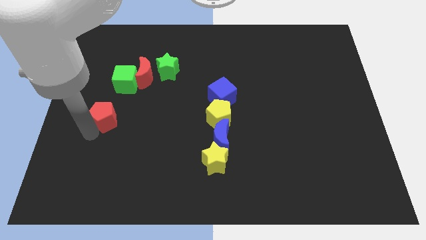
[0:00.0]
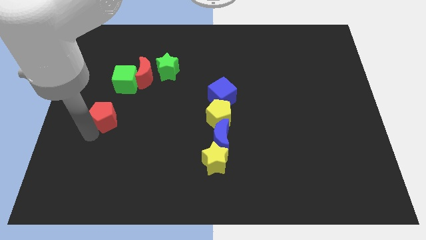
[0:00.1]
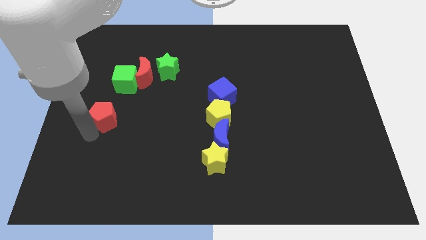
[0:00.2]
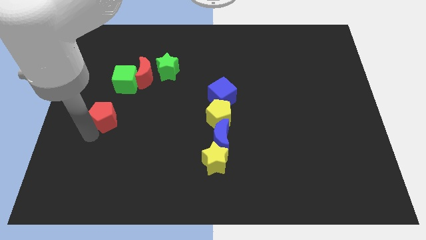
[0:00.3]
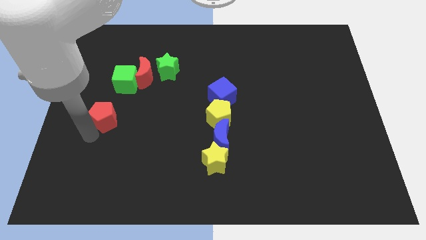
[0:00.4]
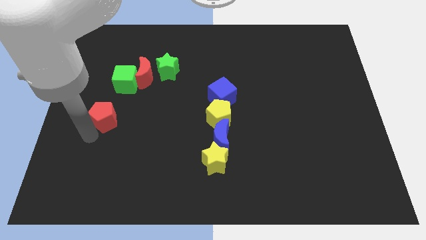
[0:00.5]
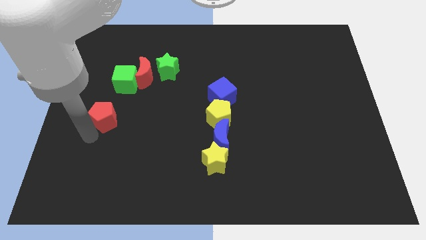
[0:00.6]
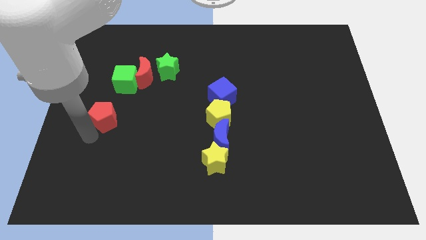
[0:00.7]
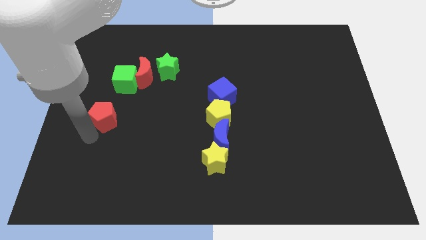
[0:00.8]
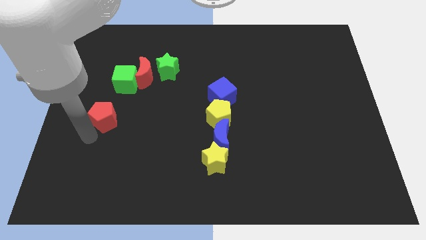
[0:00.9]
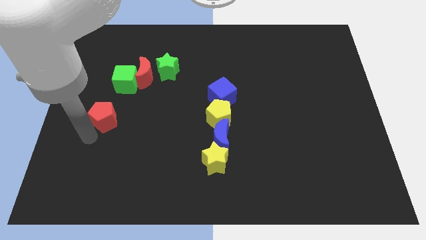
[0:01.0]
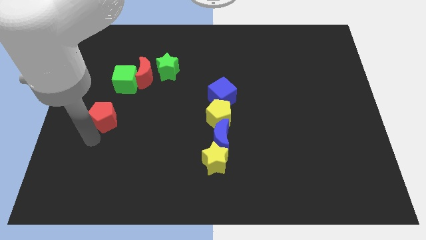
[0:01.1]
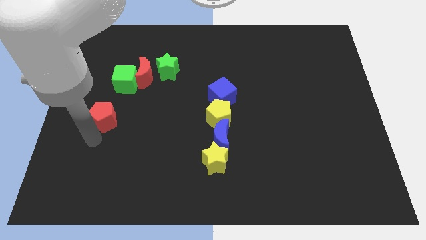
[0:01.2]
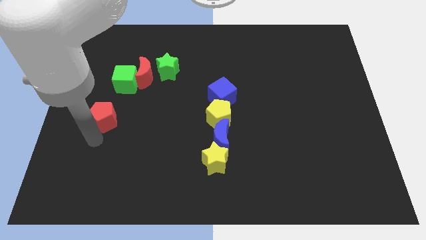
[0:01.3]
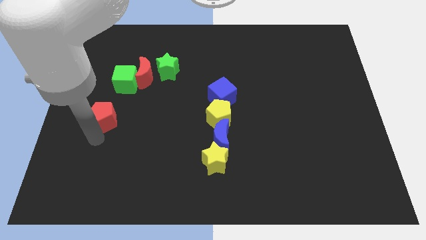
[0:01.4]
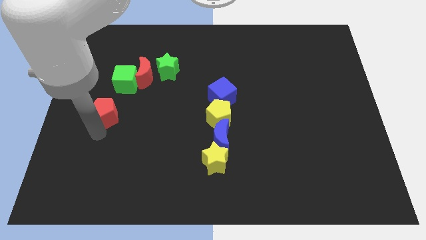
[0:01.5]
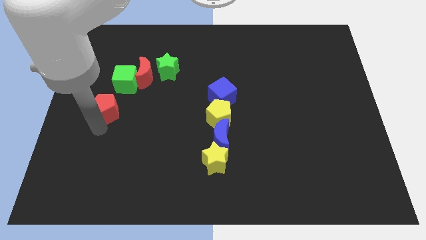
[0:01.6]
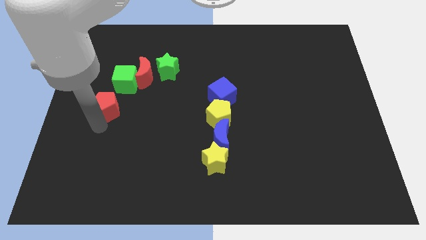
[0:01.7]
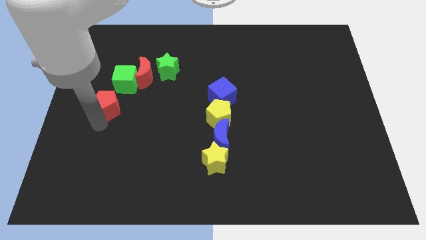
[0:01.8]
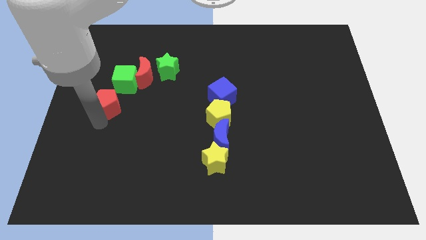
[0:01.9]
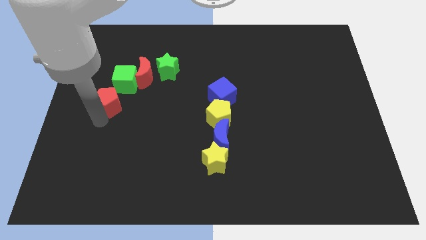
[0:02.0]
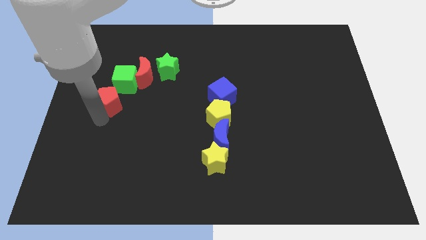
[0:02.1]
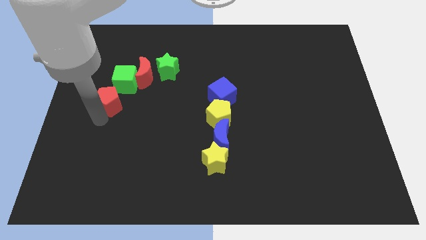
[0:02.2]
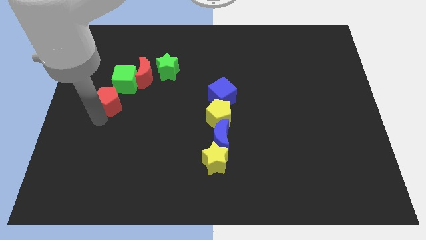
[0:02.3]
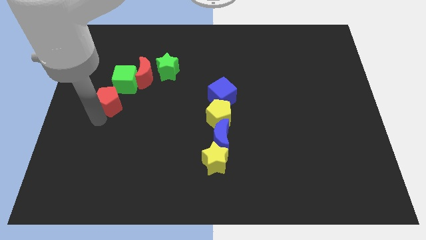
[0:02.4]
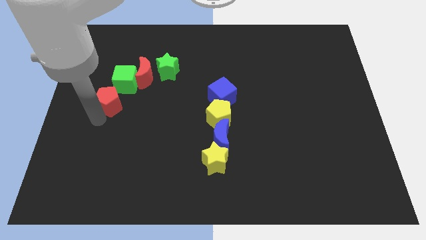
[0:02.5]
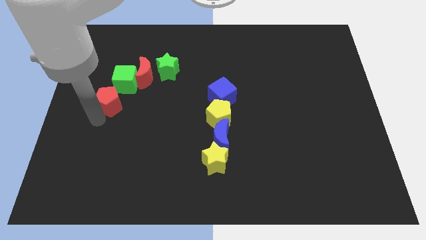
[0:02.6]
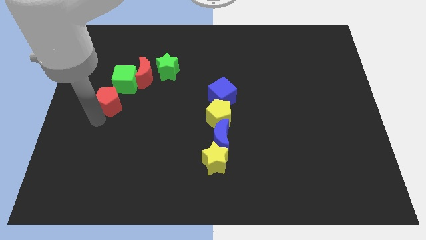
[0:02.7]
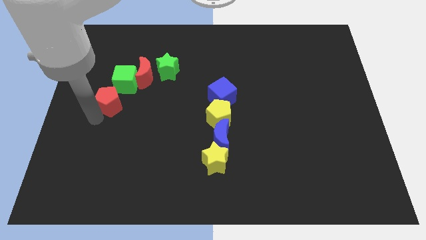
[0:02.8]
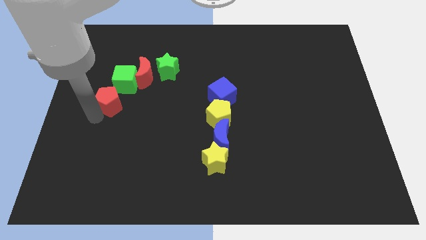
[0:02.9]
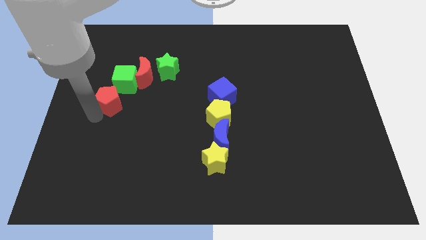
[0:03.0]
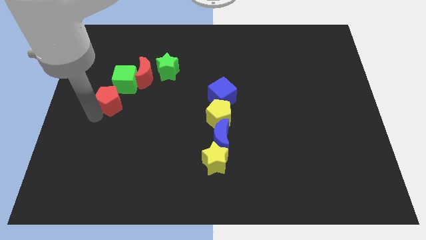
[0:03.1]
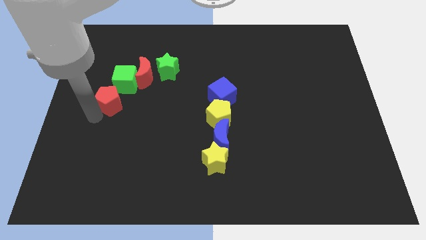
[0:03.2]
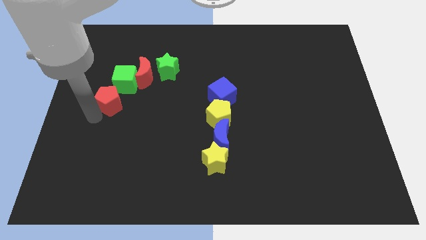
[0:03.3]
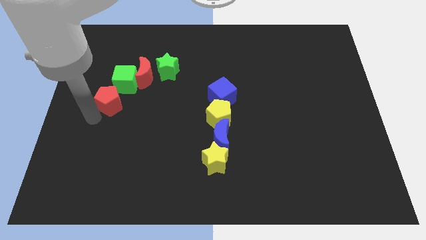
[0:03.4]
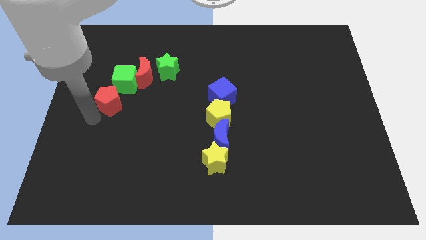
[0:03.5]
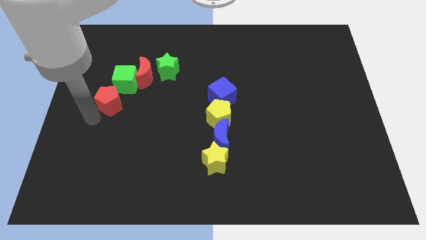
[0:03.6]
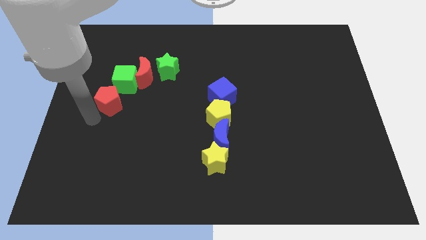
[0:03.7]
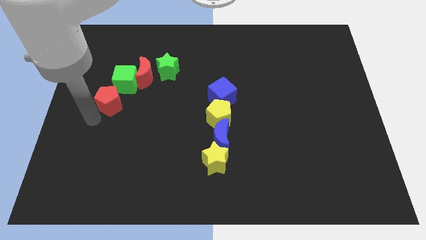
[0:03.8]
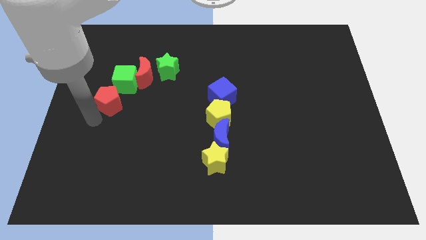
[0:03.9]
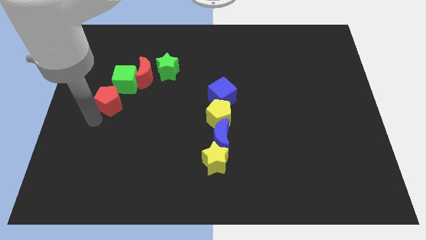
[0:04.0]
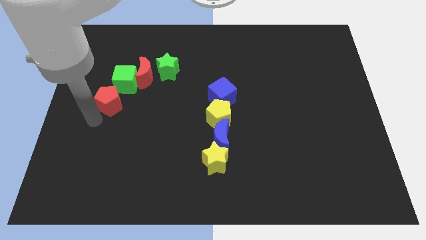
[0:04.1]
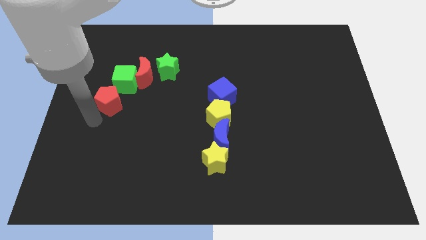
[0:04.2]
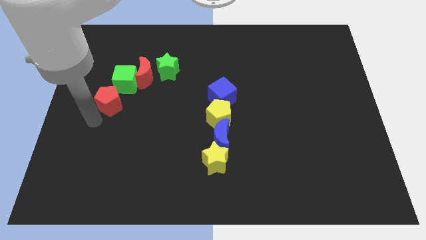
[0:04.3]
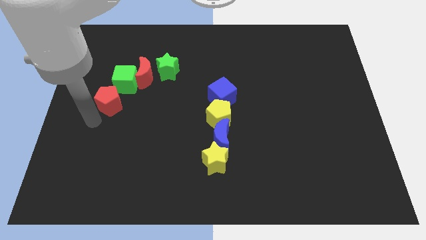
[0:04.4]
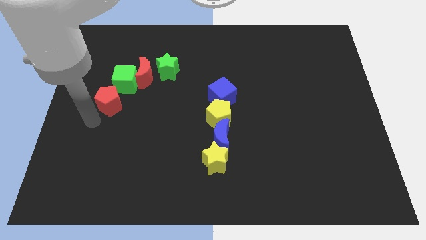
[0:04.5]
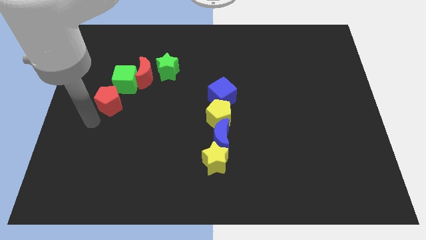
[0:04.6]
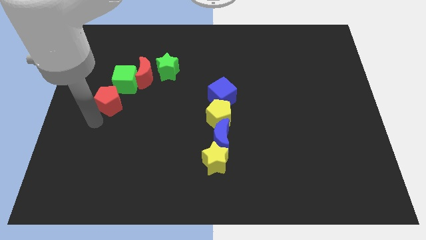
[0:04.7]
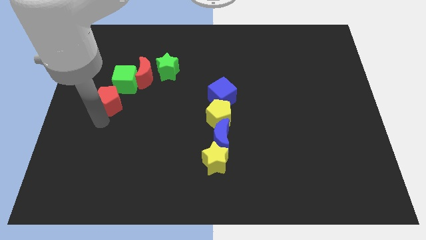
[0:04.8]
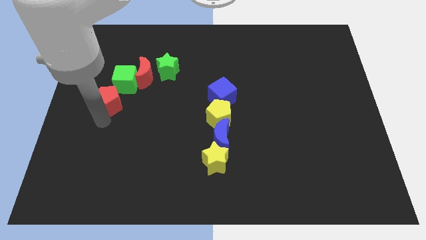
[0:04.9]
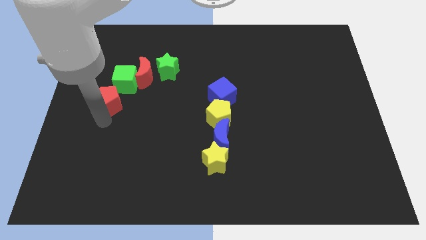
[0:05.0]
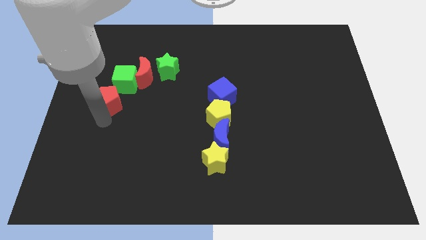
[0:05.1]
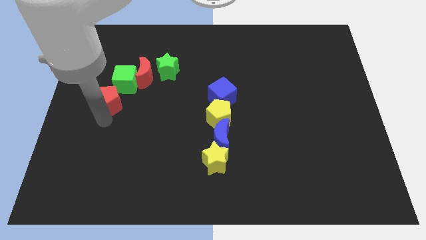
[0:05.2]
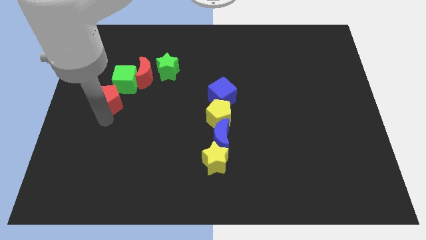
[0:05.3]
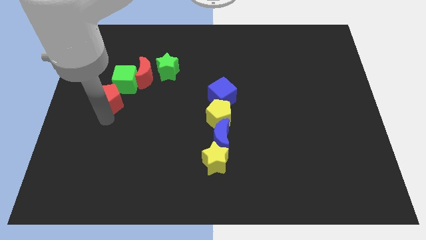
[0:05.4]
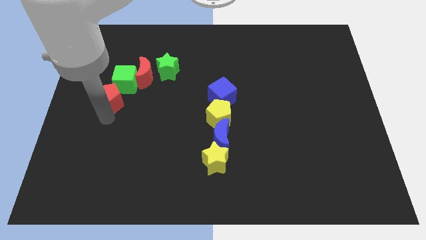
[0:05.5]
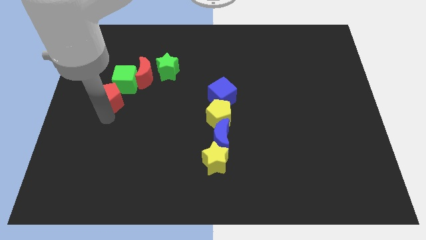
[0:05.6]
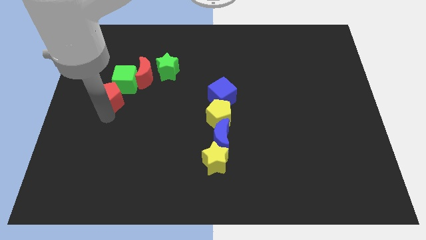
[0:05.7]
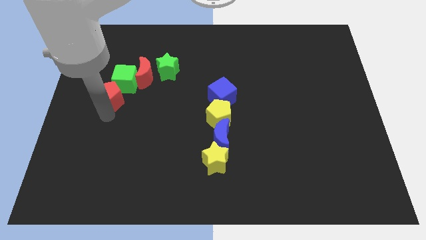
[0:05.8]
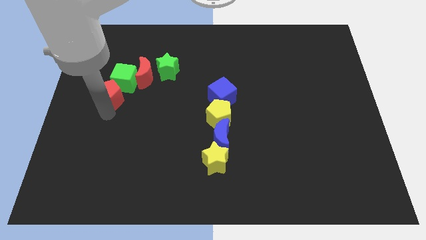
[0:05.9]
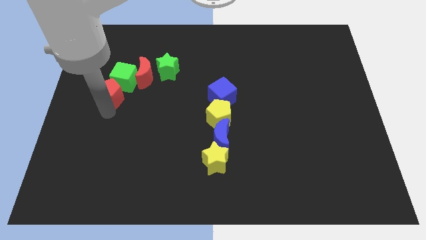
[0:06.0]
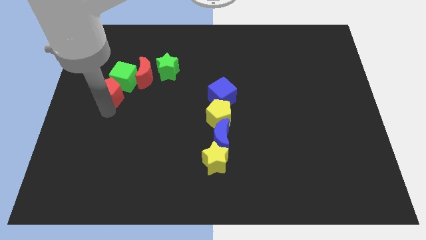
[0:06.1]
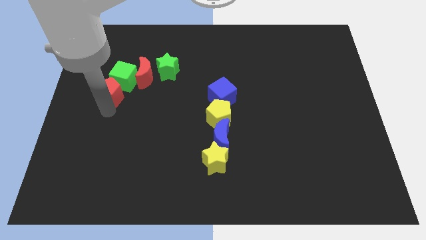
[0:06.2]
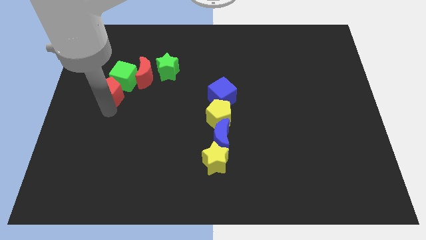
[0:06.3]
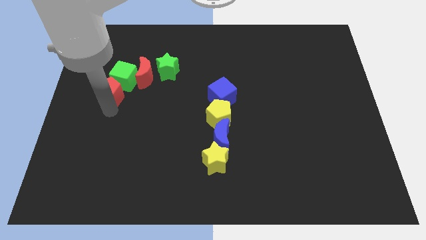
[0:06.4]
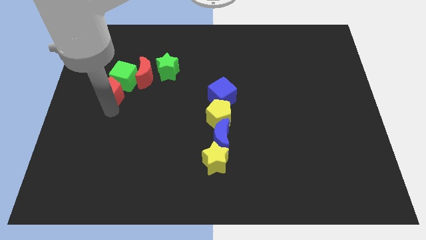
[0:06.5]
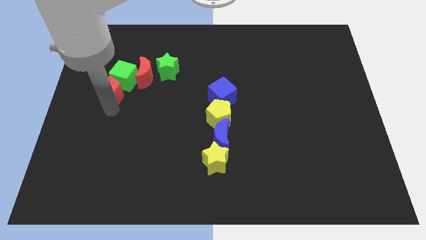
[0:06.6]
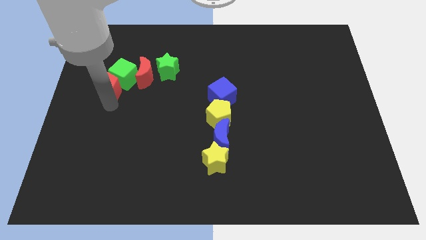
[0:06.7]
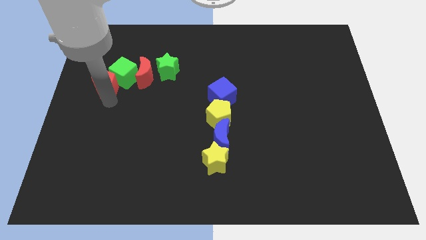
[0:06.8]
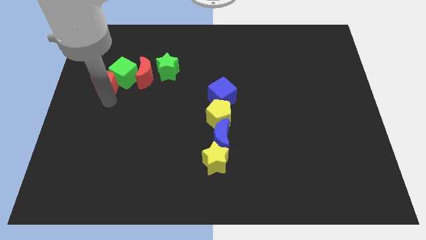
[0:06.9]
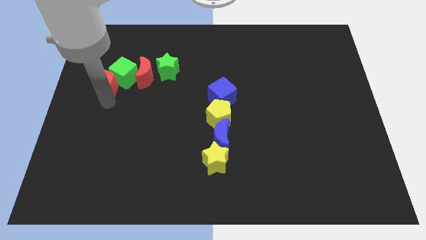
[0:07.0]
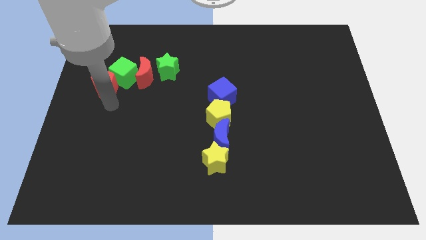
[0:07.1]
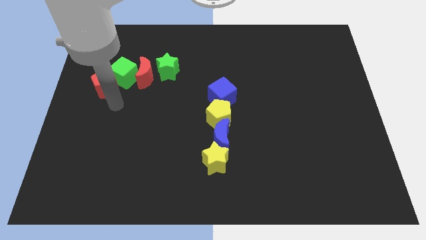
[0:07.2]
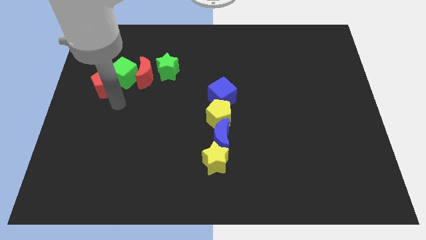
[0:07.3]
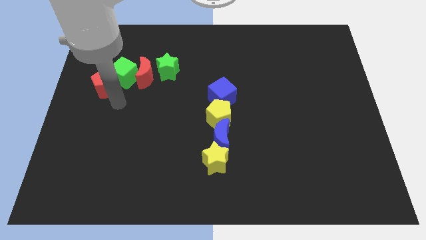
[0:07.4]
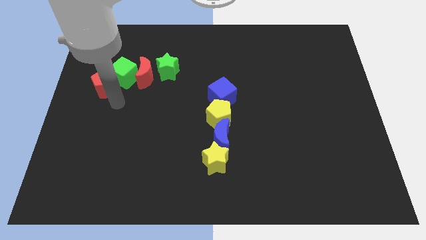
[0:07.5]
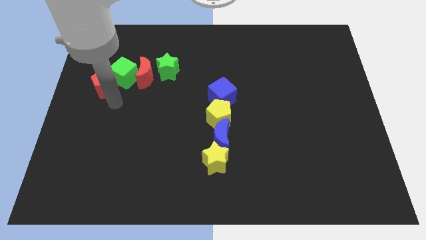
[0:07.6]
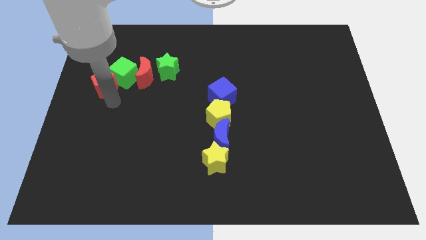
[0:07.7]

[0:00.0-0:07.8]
push the red pentagon into green cube

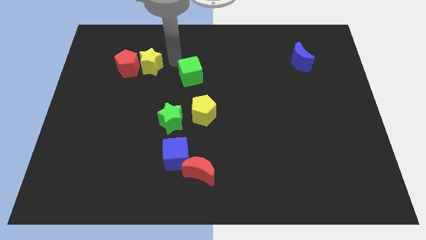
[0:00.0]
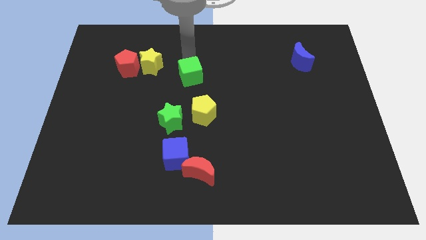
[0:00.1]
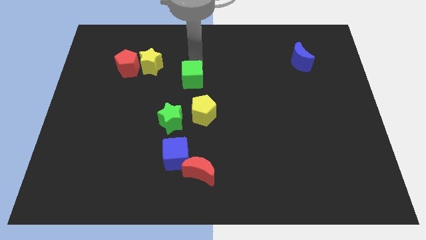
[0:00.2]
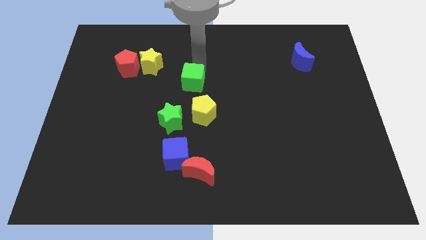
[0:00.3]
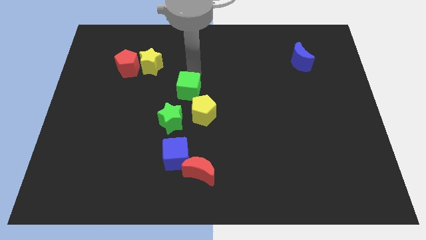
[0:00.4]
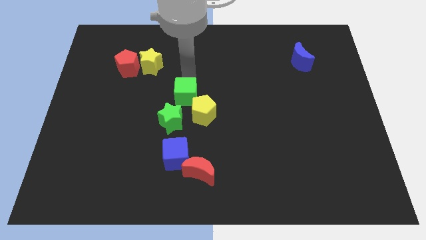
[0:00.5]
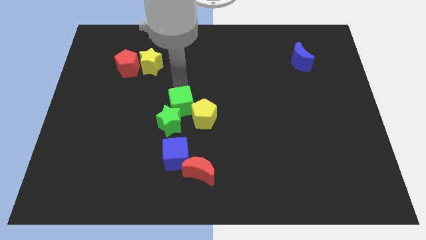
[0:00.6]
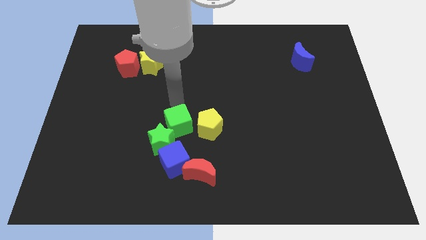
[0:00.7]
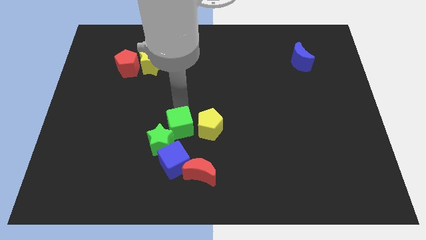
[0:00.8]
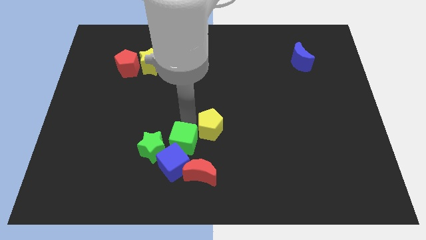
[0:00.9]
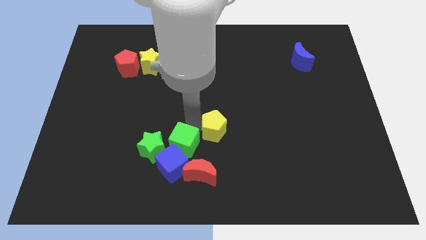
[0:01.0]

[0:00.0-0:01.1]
move the green cube to the right of the green star

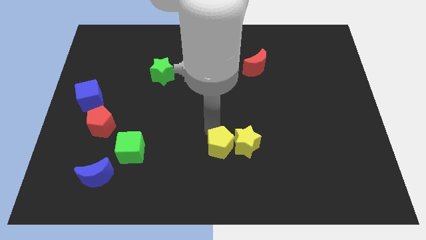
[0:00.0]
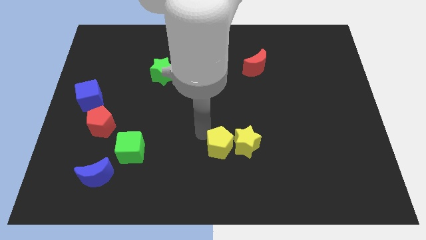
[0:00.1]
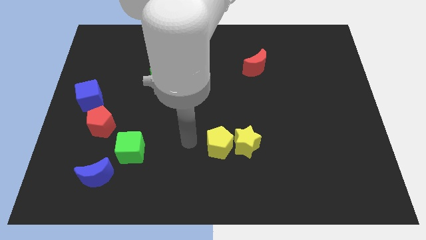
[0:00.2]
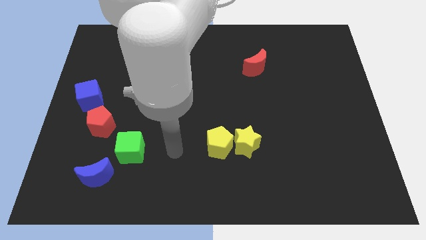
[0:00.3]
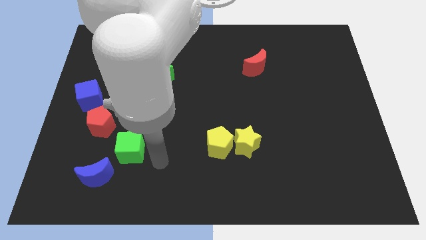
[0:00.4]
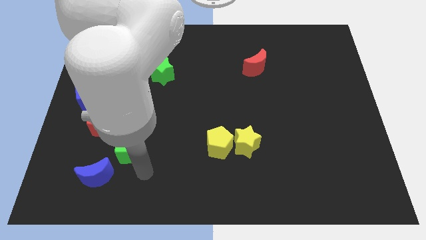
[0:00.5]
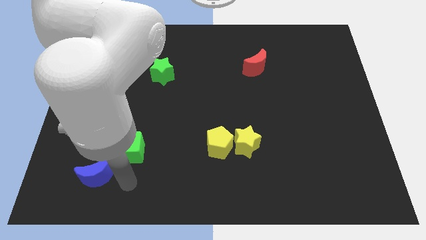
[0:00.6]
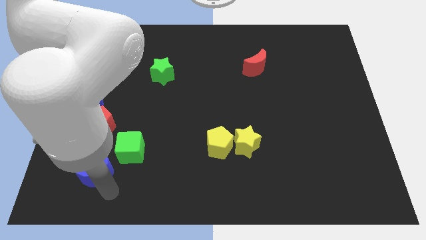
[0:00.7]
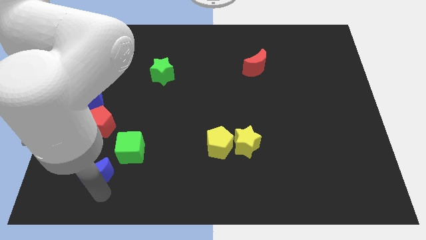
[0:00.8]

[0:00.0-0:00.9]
move your arm away from the yellow pentagon
